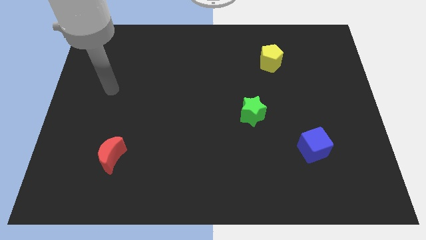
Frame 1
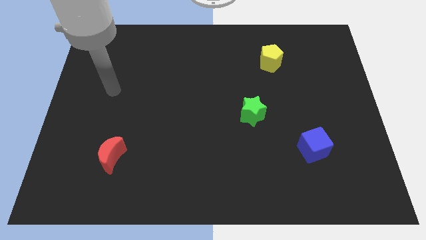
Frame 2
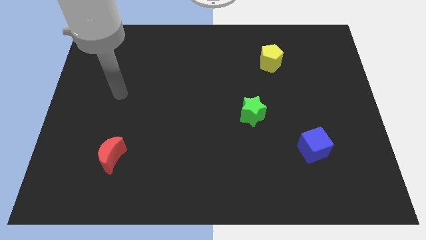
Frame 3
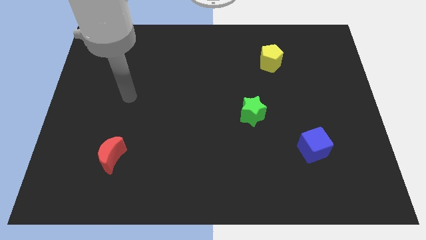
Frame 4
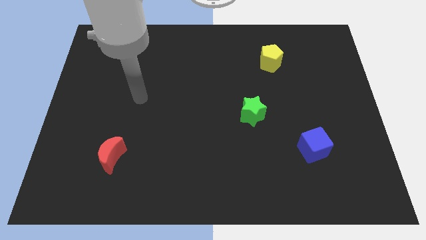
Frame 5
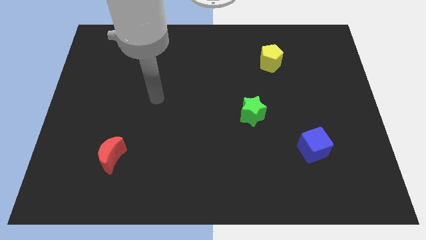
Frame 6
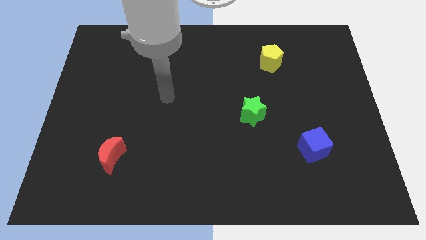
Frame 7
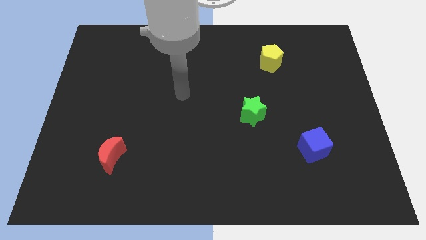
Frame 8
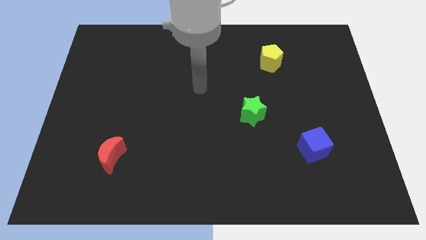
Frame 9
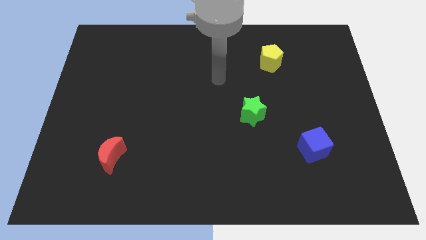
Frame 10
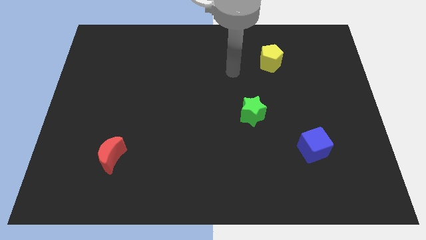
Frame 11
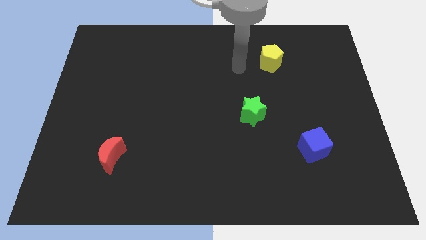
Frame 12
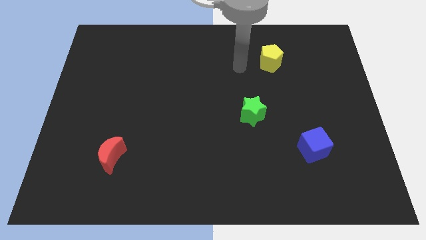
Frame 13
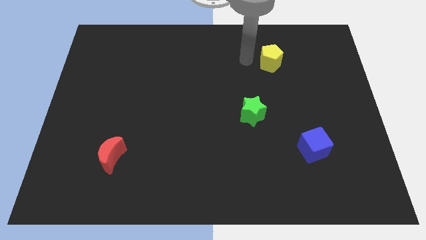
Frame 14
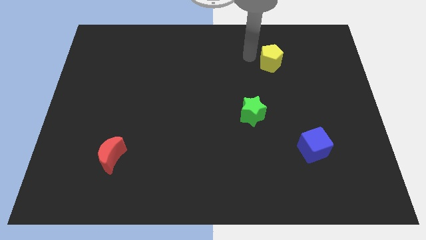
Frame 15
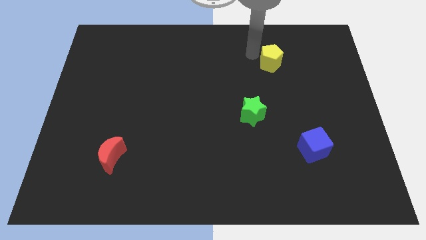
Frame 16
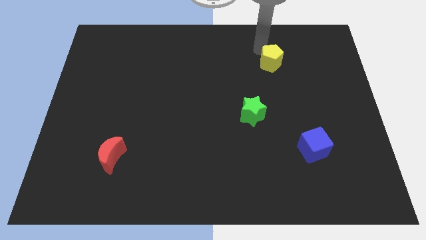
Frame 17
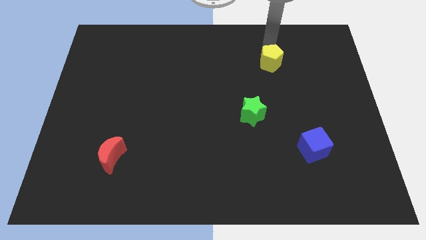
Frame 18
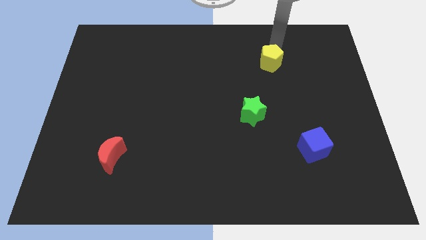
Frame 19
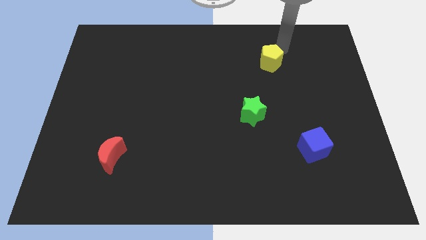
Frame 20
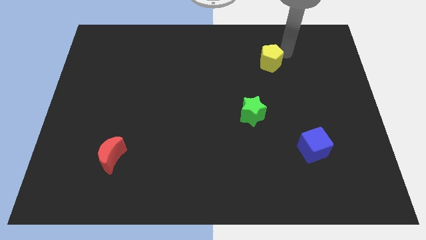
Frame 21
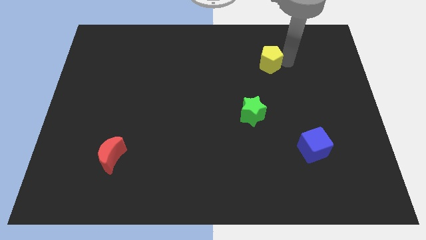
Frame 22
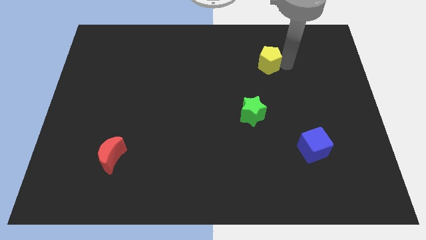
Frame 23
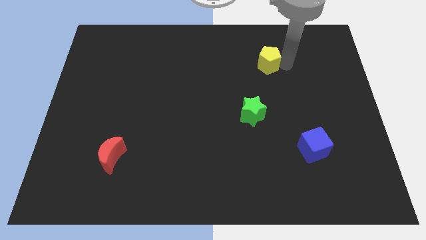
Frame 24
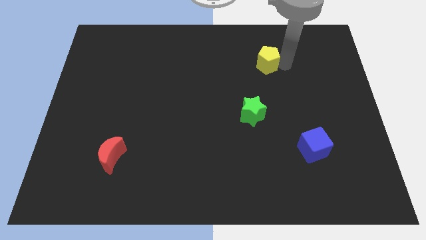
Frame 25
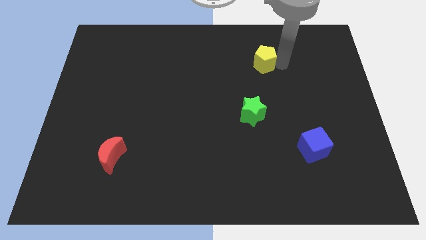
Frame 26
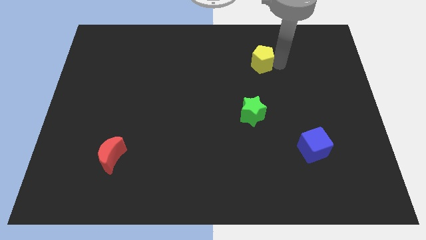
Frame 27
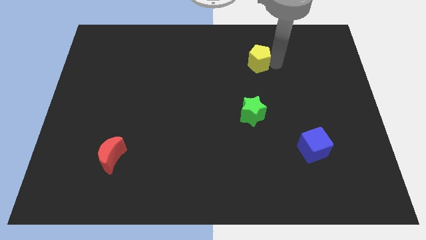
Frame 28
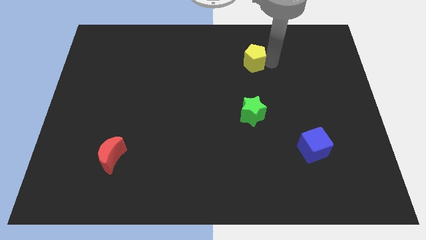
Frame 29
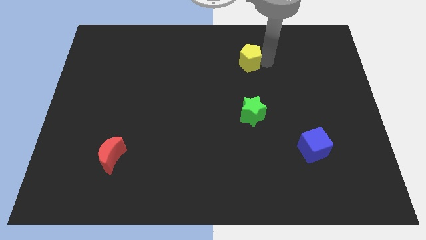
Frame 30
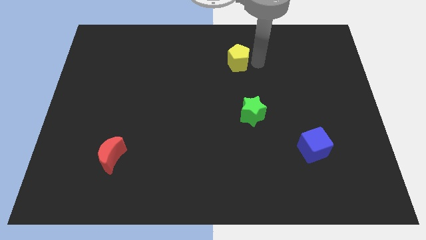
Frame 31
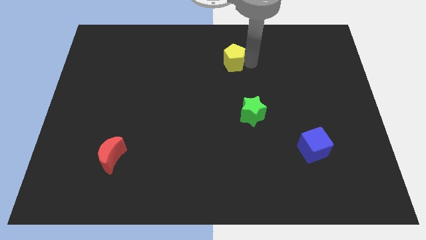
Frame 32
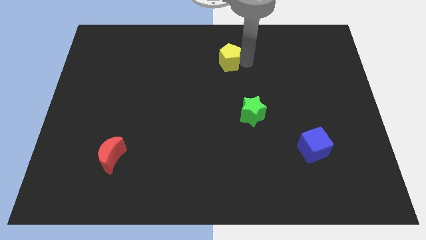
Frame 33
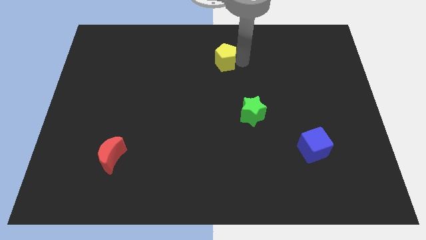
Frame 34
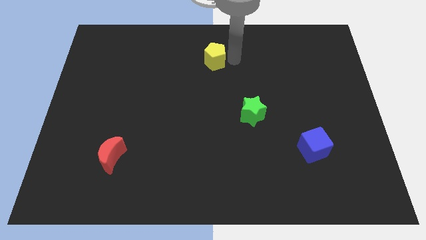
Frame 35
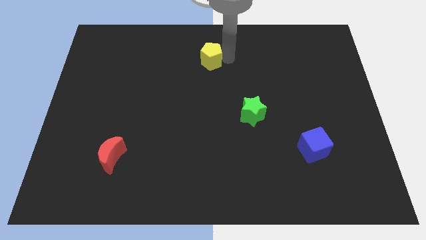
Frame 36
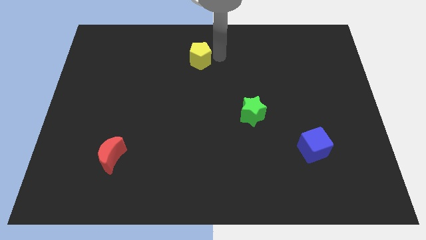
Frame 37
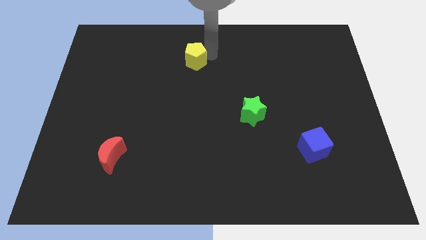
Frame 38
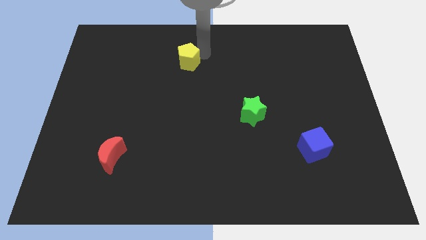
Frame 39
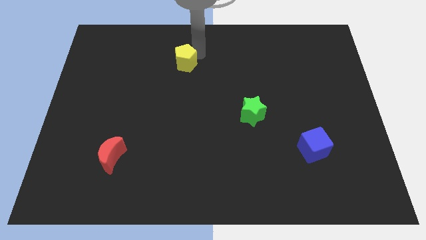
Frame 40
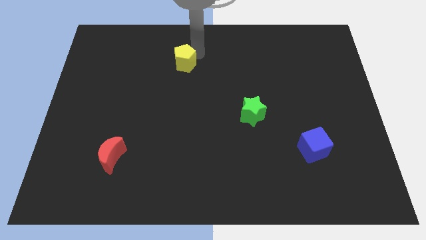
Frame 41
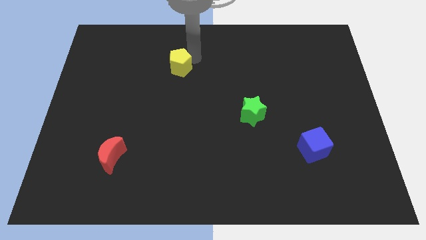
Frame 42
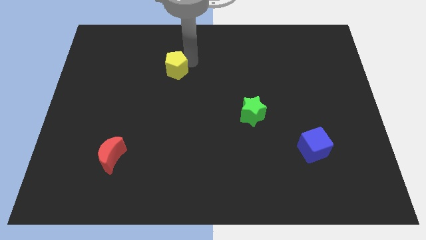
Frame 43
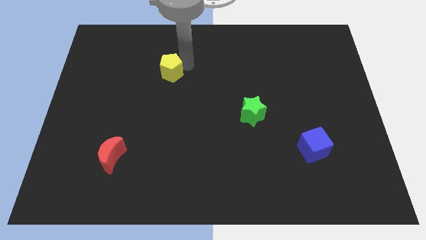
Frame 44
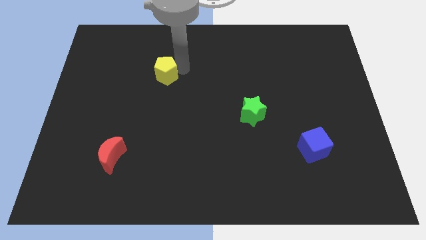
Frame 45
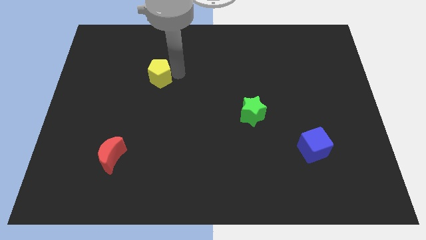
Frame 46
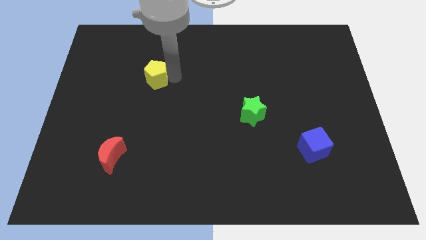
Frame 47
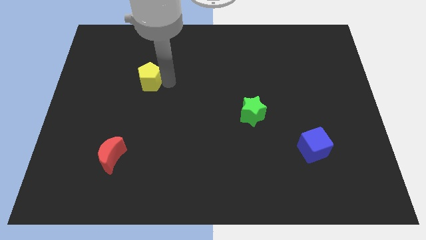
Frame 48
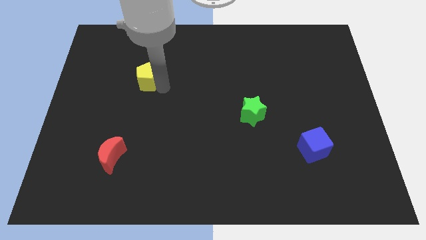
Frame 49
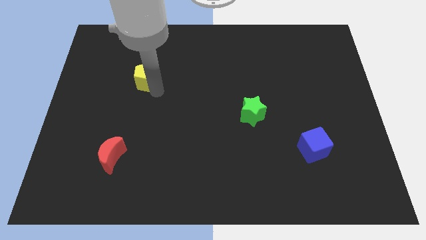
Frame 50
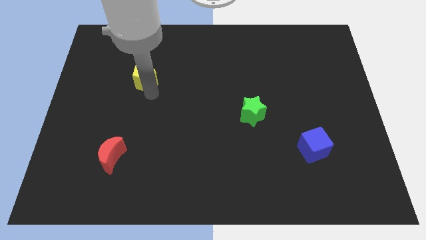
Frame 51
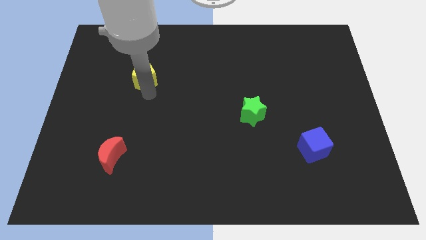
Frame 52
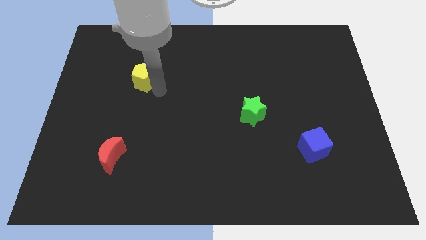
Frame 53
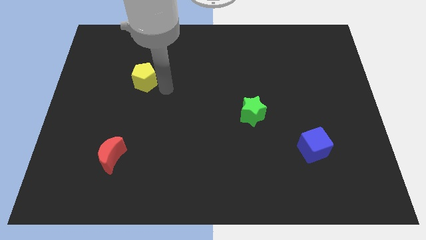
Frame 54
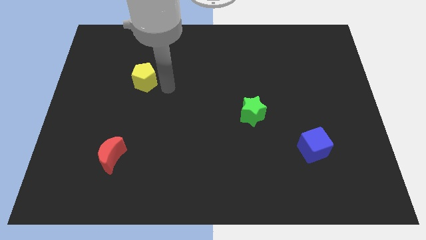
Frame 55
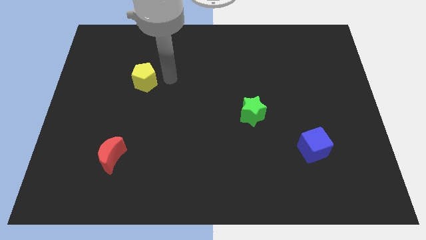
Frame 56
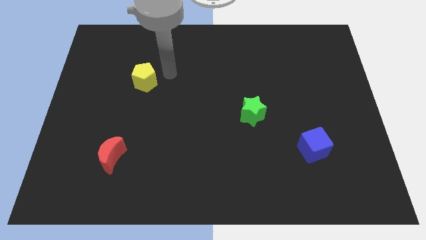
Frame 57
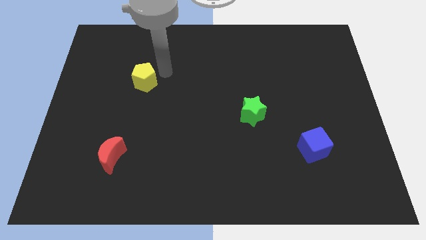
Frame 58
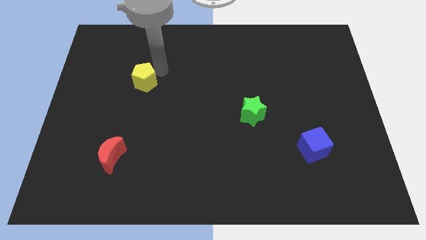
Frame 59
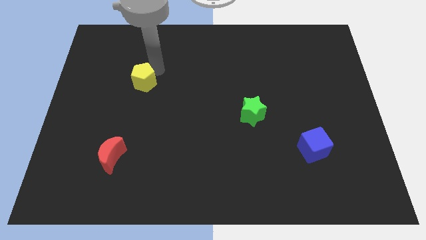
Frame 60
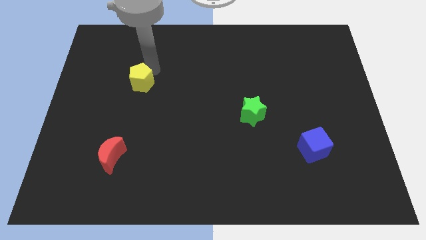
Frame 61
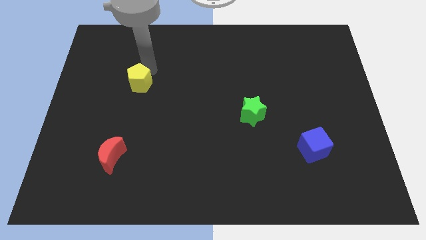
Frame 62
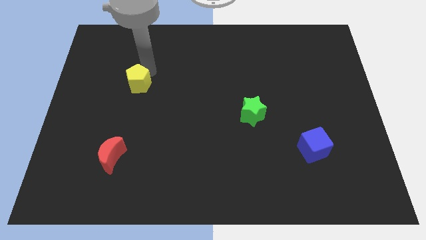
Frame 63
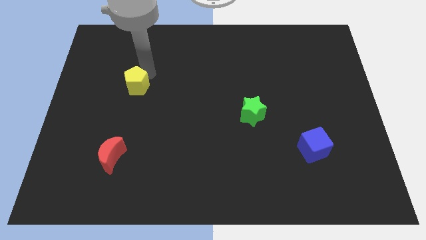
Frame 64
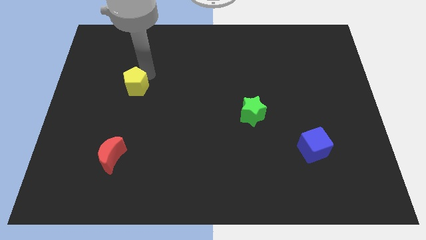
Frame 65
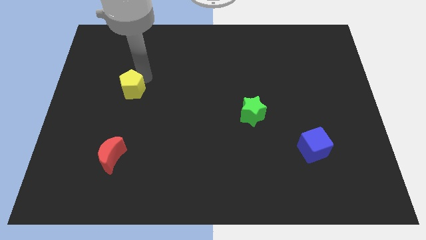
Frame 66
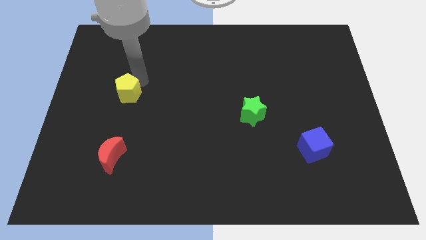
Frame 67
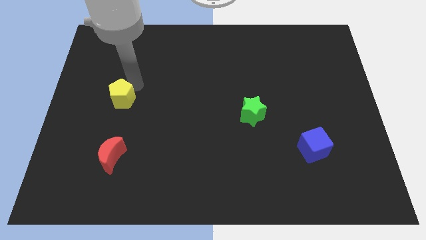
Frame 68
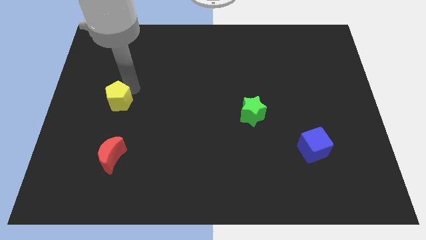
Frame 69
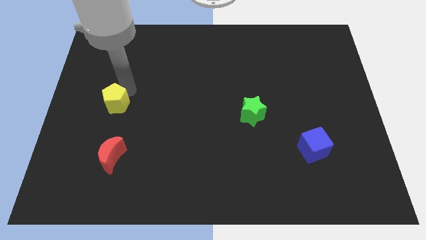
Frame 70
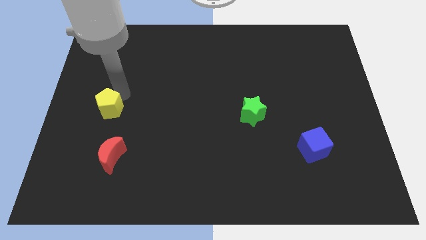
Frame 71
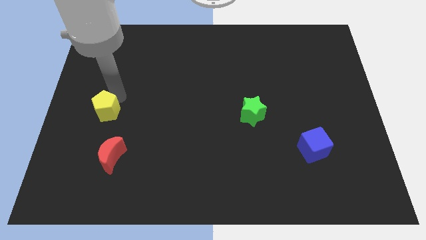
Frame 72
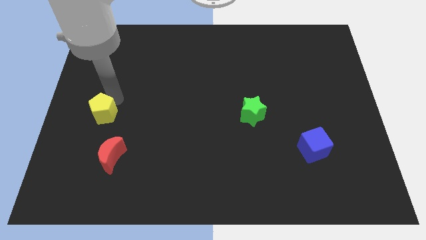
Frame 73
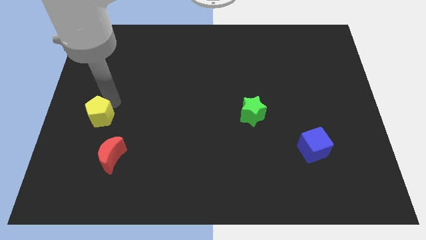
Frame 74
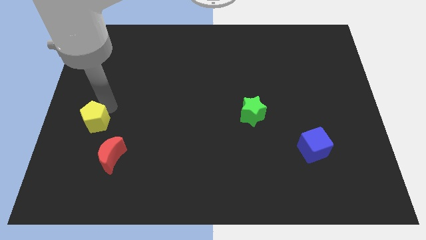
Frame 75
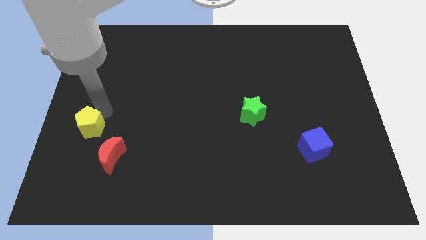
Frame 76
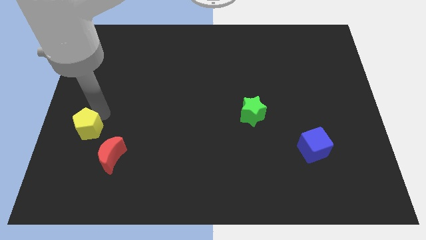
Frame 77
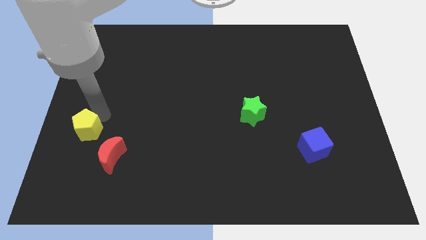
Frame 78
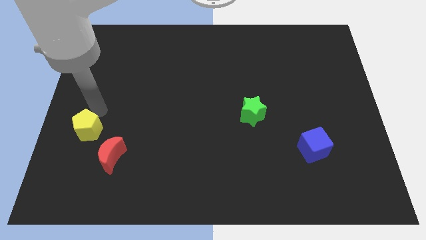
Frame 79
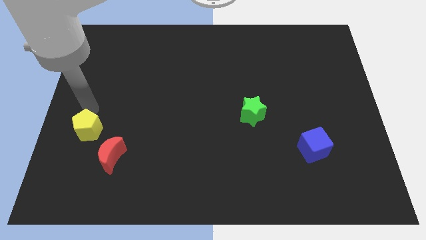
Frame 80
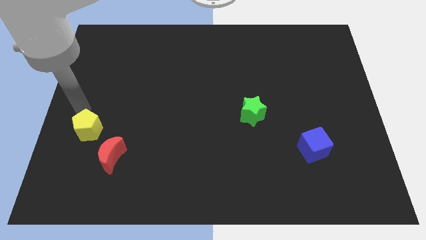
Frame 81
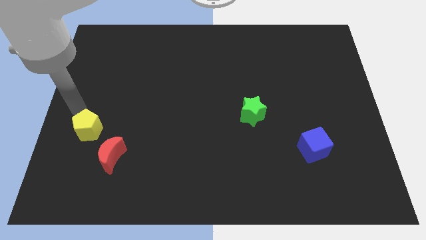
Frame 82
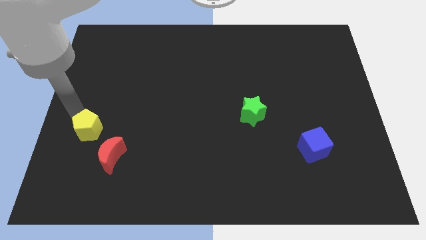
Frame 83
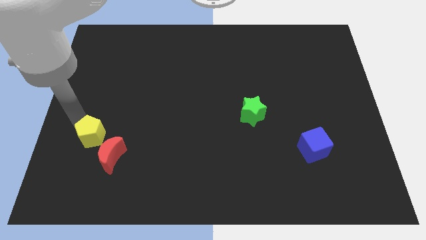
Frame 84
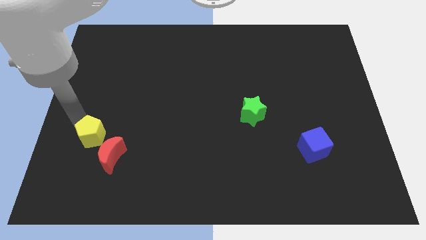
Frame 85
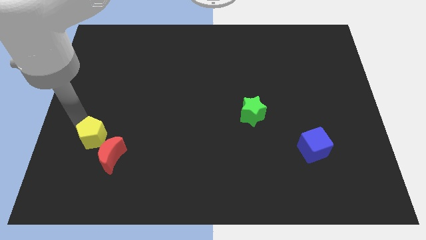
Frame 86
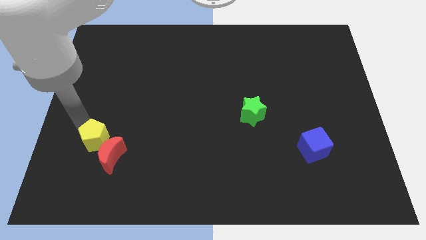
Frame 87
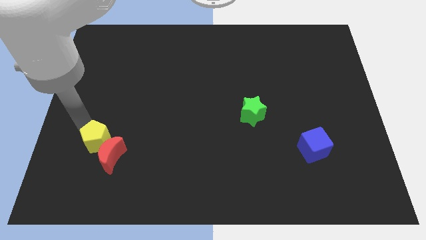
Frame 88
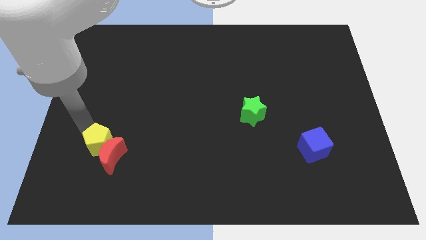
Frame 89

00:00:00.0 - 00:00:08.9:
push the yellow block next to the moon
